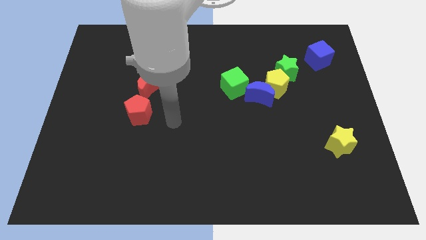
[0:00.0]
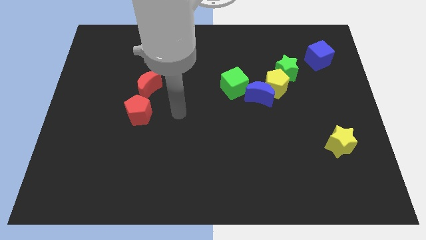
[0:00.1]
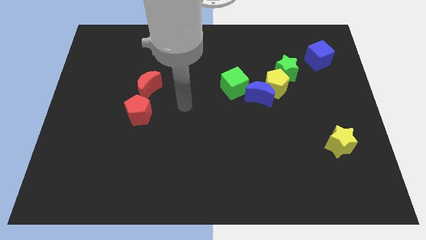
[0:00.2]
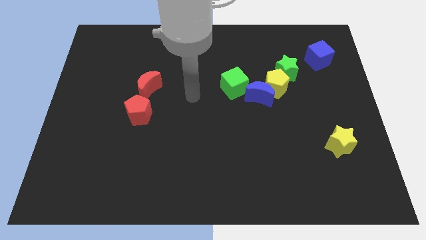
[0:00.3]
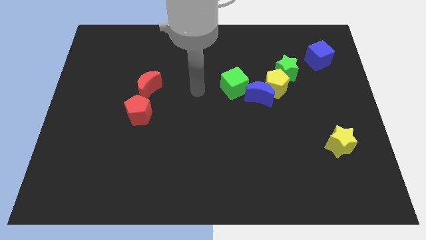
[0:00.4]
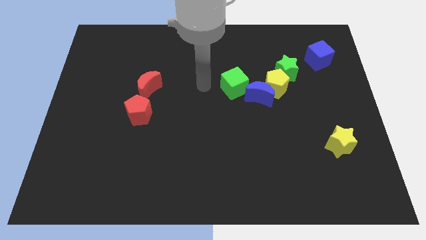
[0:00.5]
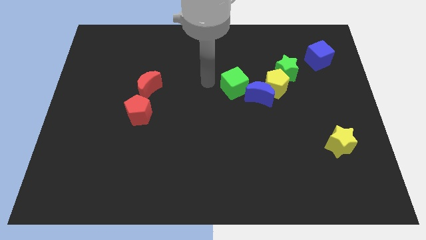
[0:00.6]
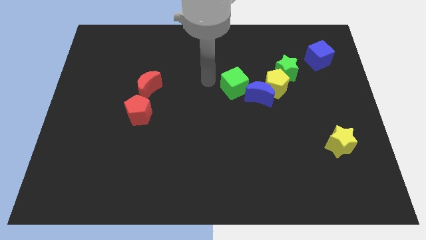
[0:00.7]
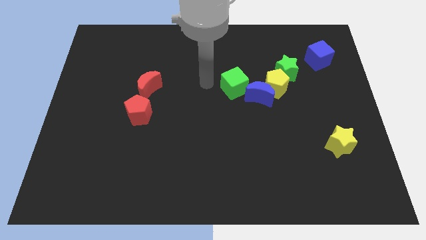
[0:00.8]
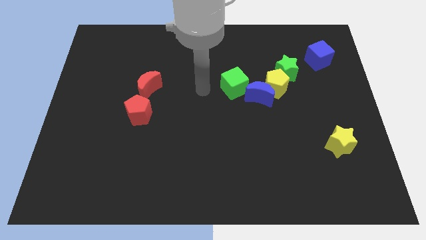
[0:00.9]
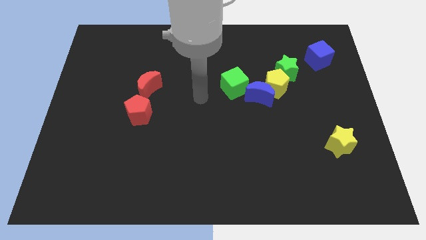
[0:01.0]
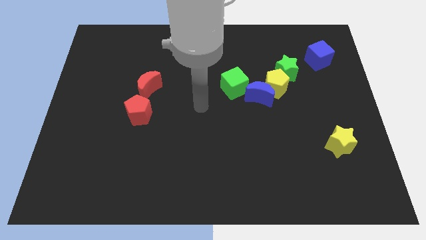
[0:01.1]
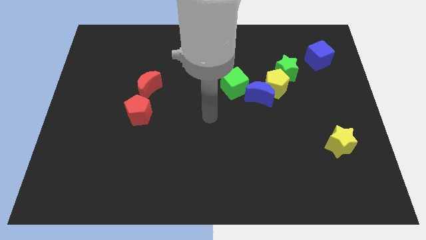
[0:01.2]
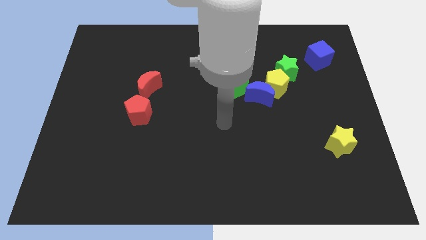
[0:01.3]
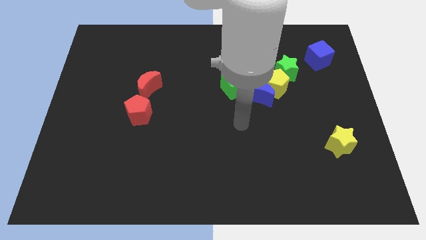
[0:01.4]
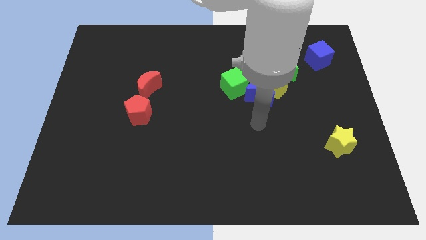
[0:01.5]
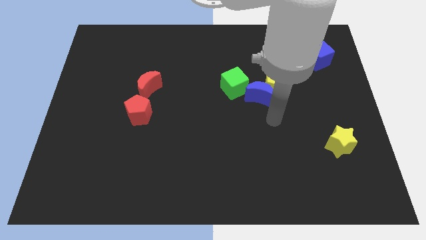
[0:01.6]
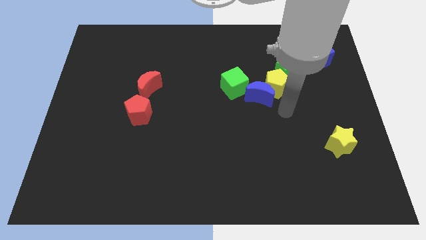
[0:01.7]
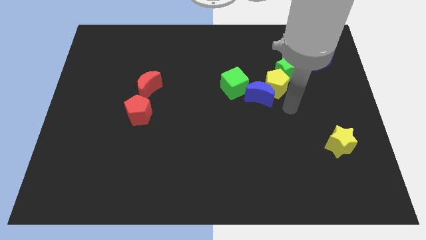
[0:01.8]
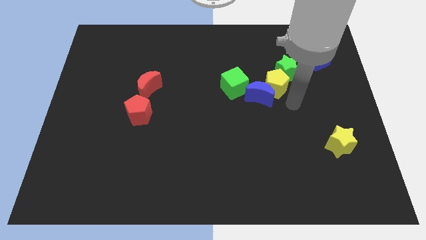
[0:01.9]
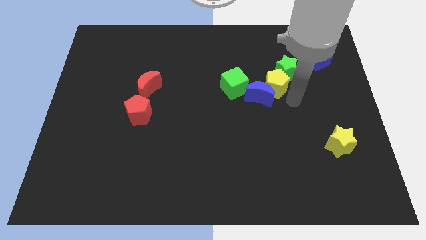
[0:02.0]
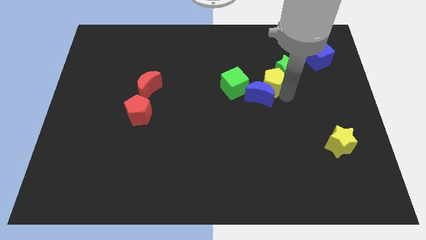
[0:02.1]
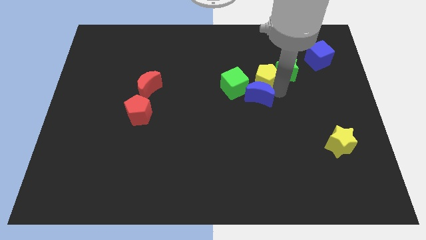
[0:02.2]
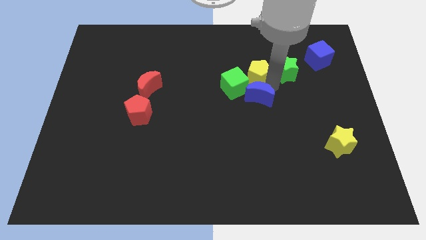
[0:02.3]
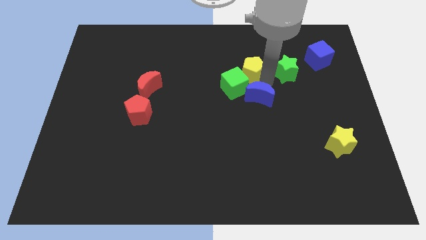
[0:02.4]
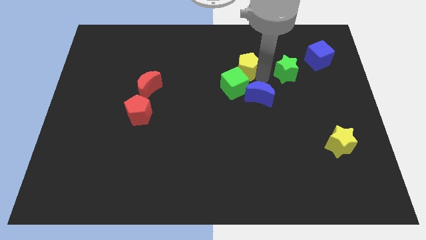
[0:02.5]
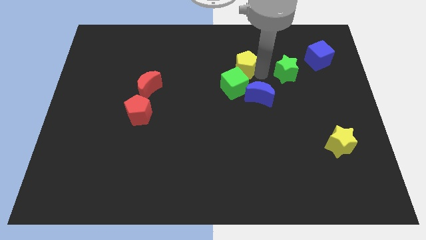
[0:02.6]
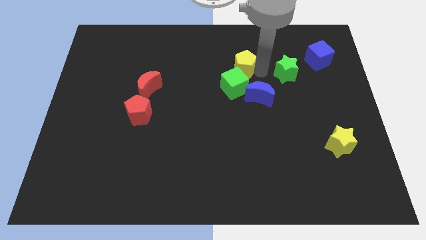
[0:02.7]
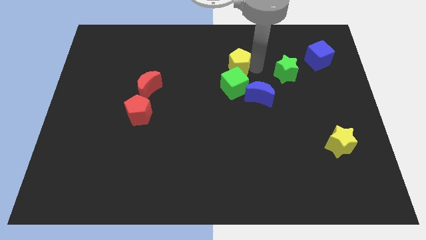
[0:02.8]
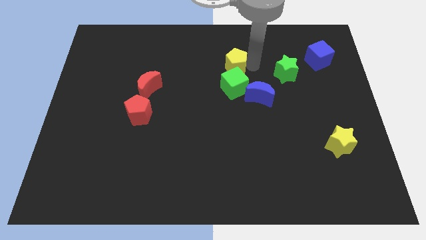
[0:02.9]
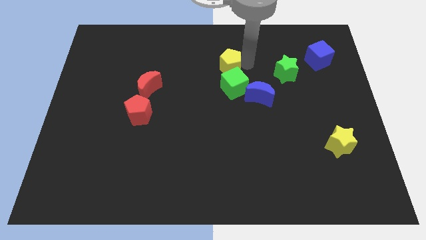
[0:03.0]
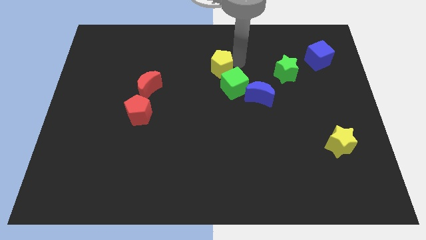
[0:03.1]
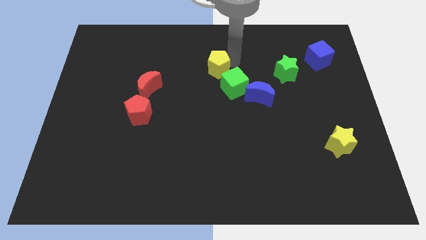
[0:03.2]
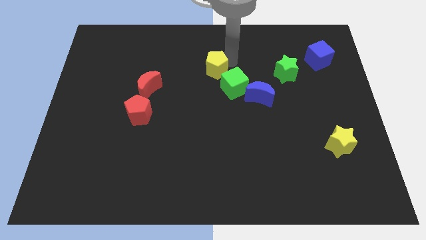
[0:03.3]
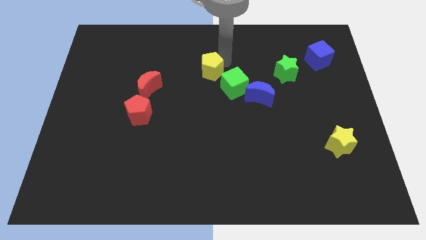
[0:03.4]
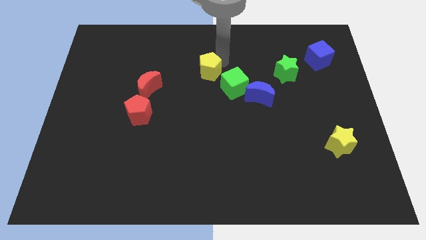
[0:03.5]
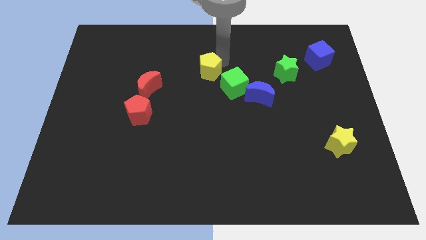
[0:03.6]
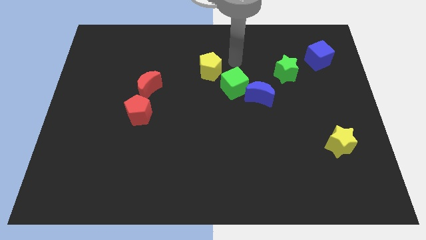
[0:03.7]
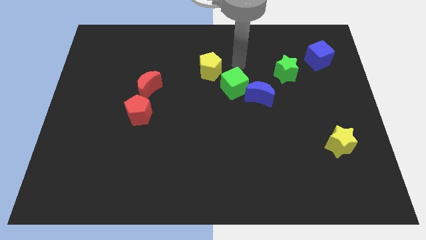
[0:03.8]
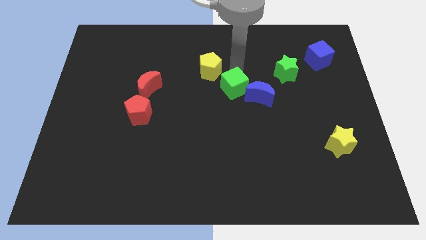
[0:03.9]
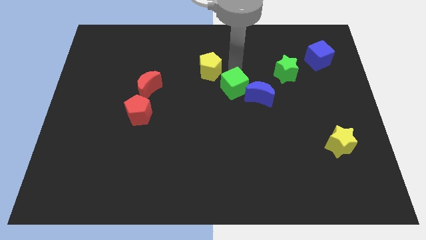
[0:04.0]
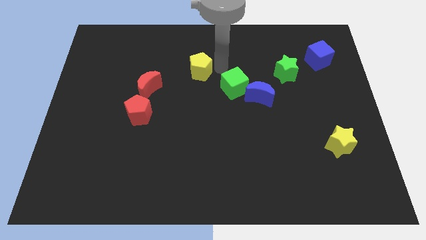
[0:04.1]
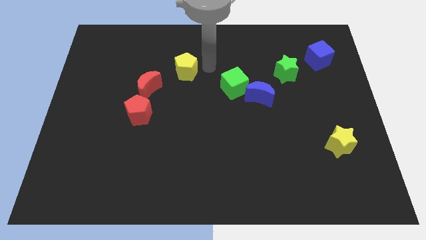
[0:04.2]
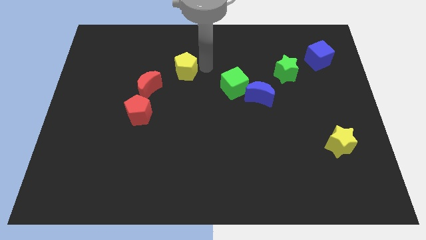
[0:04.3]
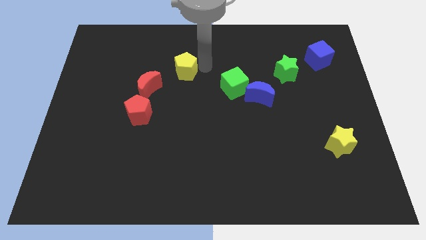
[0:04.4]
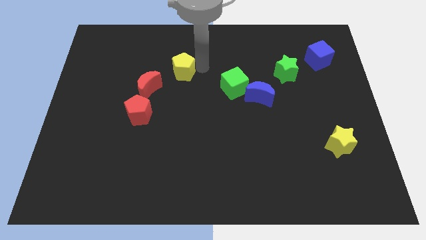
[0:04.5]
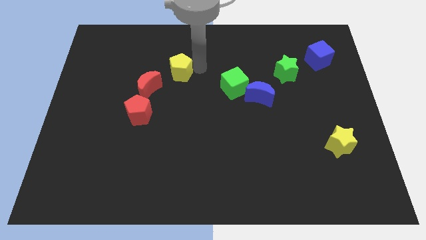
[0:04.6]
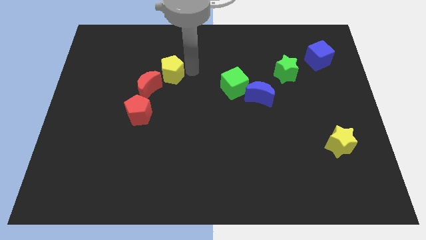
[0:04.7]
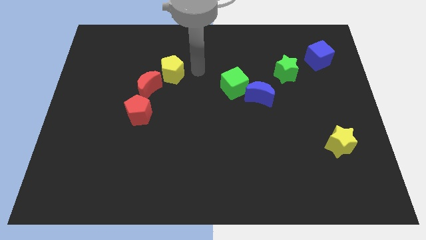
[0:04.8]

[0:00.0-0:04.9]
slide the yellow pentagon close to the top side of the red crescent

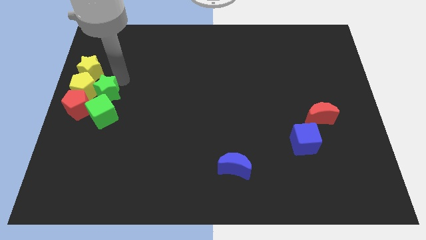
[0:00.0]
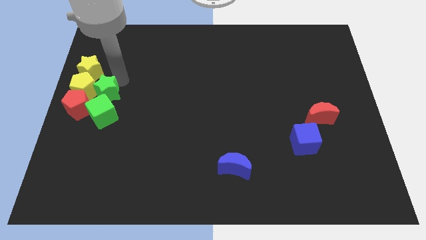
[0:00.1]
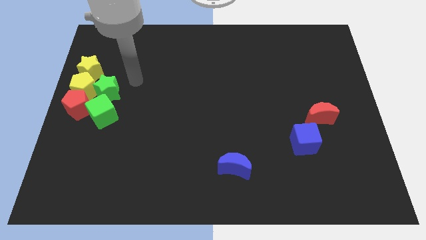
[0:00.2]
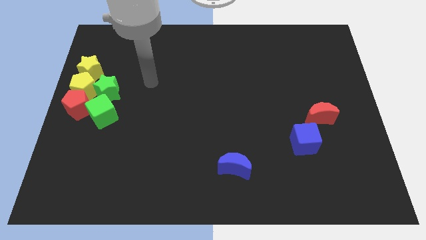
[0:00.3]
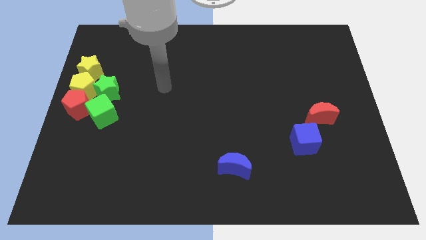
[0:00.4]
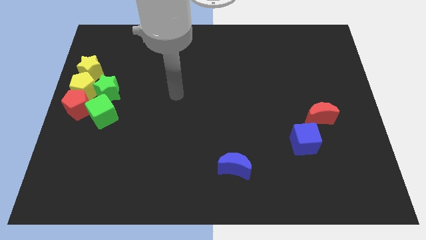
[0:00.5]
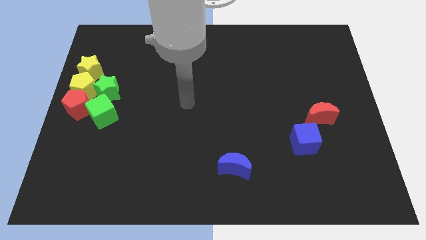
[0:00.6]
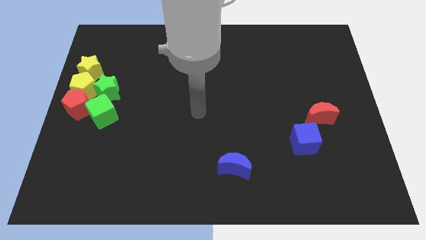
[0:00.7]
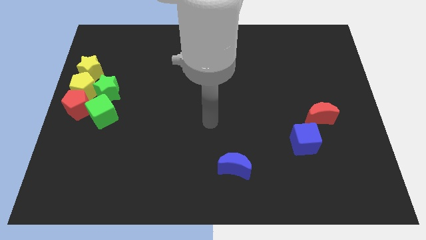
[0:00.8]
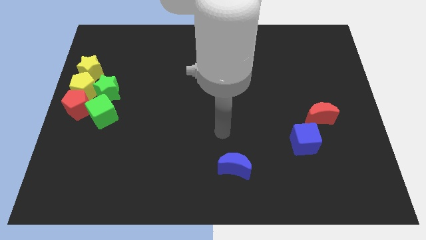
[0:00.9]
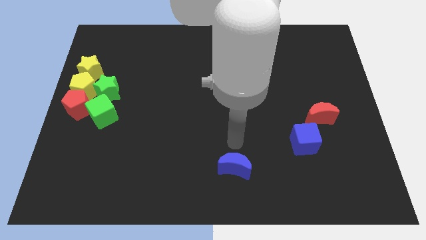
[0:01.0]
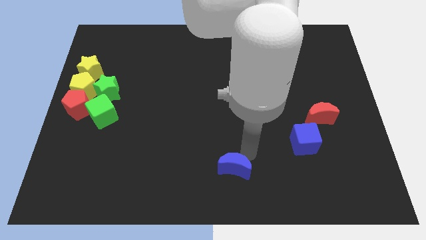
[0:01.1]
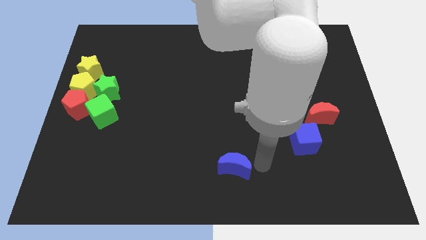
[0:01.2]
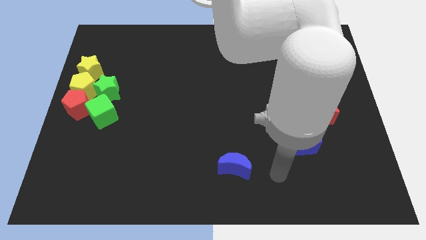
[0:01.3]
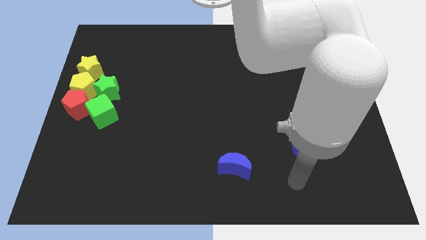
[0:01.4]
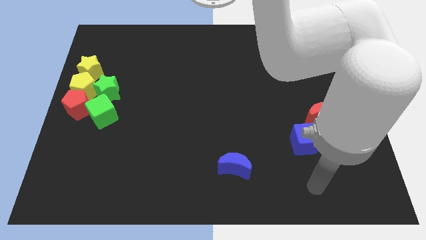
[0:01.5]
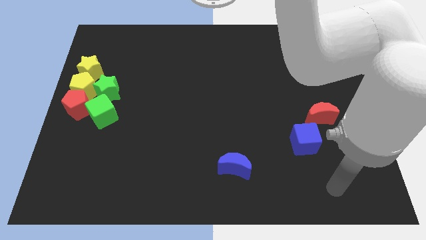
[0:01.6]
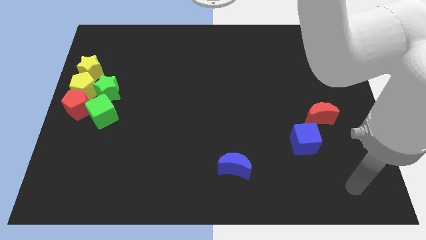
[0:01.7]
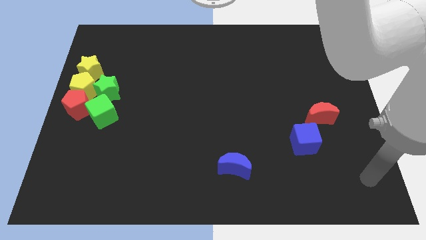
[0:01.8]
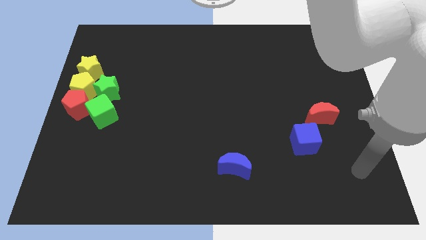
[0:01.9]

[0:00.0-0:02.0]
move the arm away from the green star

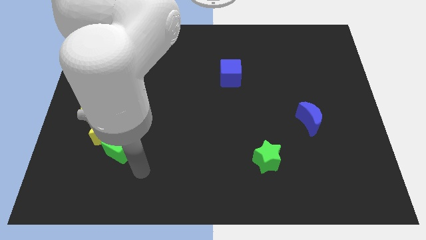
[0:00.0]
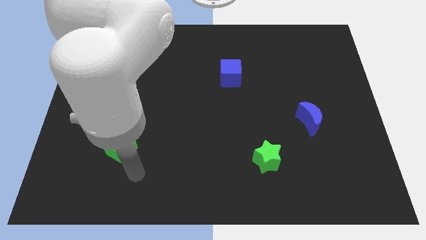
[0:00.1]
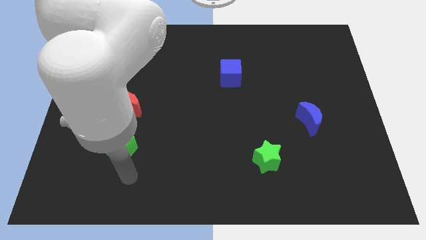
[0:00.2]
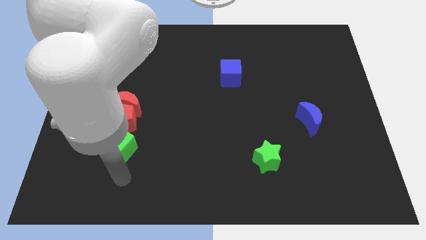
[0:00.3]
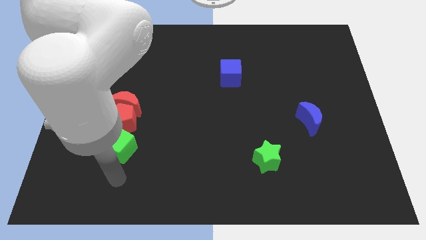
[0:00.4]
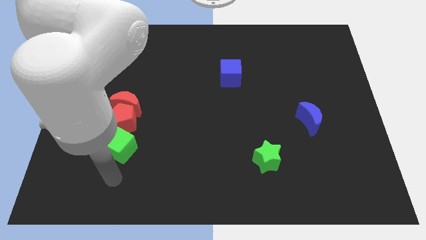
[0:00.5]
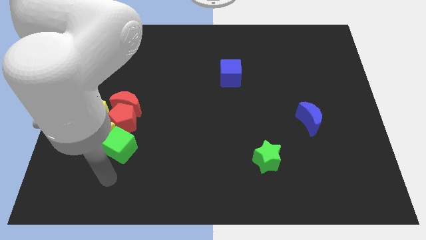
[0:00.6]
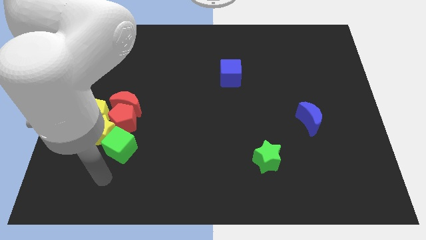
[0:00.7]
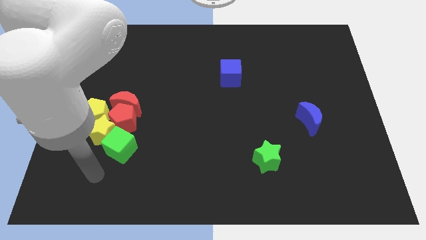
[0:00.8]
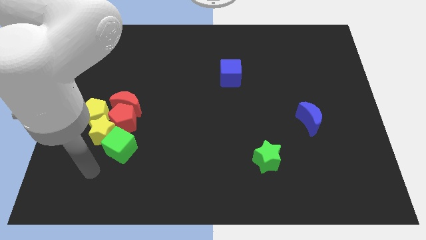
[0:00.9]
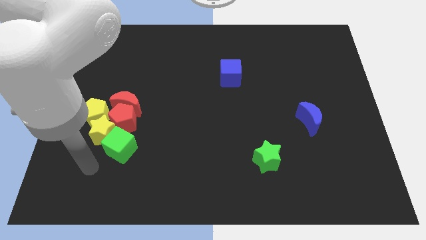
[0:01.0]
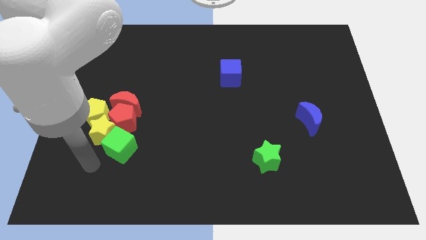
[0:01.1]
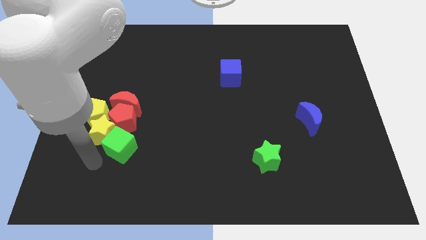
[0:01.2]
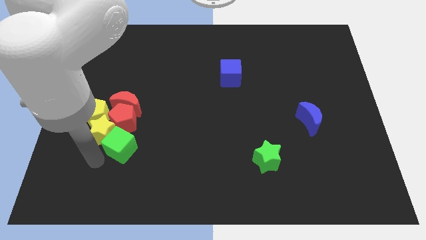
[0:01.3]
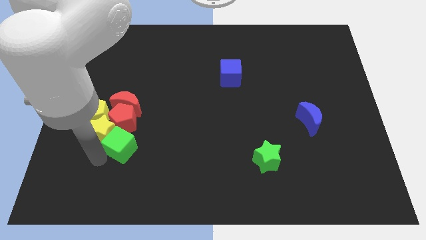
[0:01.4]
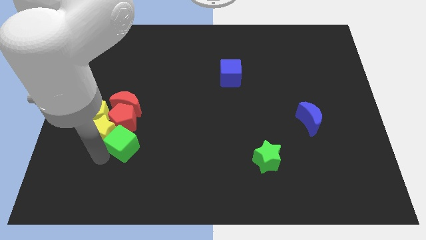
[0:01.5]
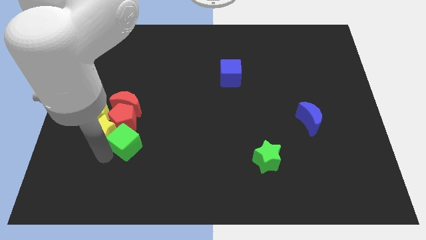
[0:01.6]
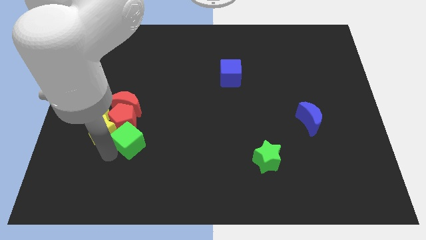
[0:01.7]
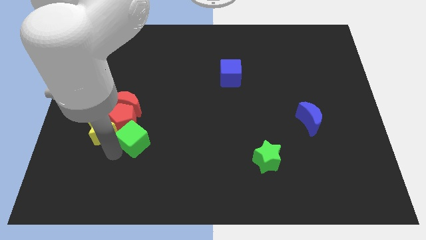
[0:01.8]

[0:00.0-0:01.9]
slightly push the green cube to the center of the board
